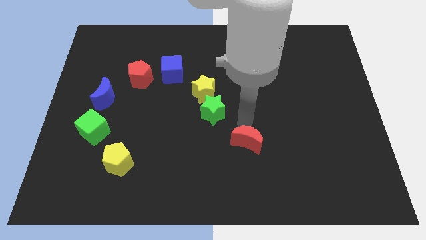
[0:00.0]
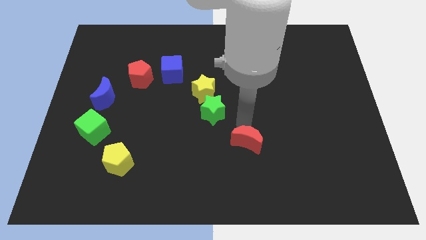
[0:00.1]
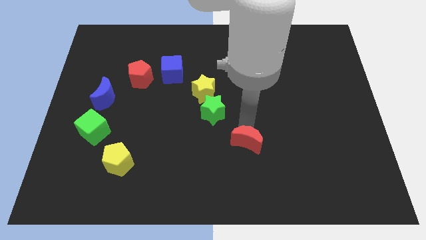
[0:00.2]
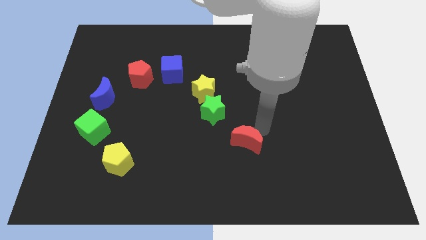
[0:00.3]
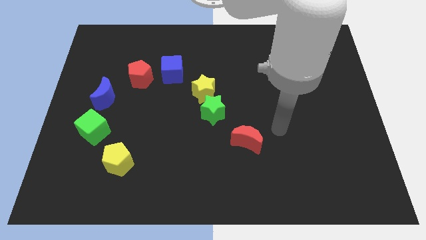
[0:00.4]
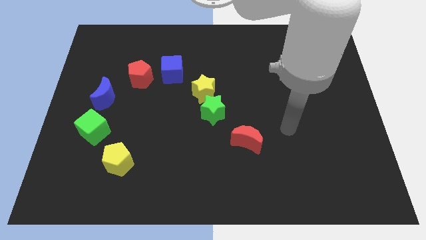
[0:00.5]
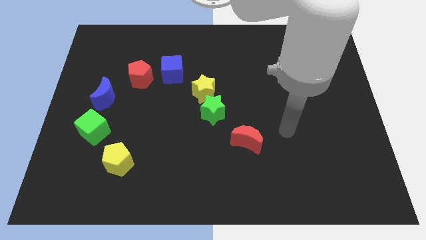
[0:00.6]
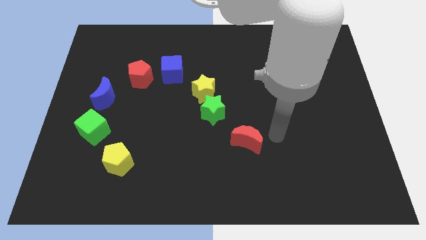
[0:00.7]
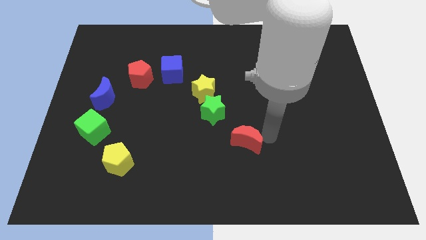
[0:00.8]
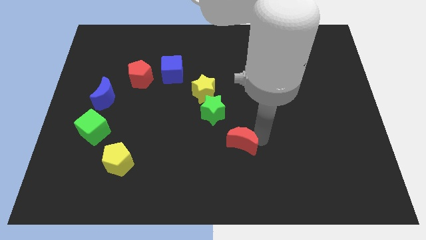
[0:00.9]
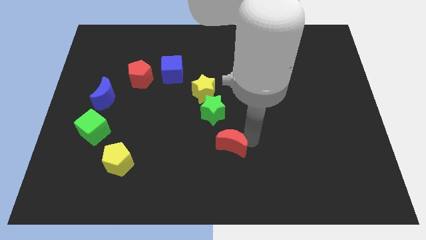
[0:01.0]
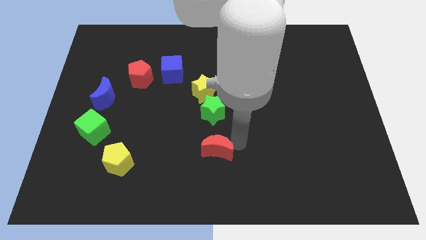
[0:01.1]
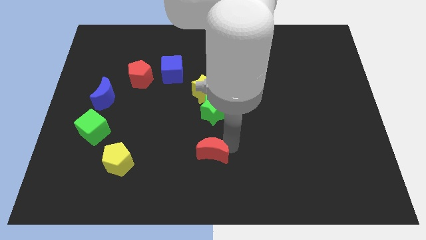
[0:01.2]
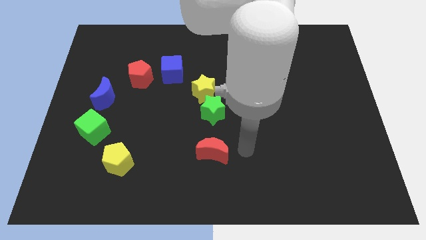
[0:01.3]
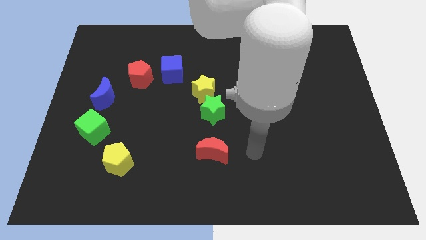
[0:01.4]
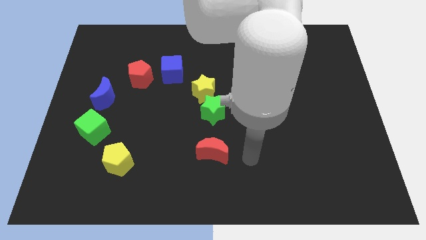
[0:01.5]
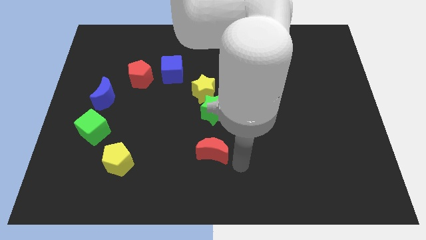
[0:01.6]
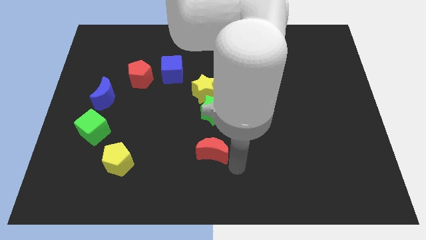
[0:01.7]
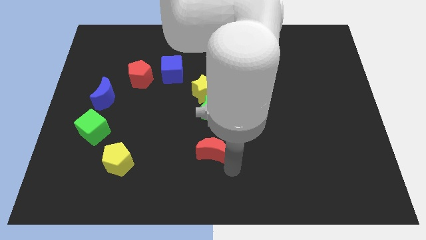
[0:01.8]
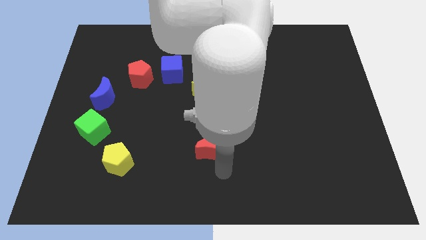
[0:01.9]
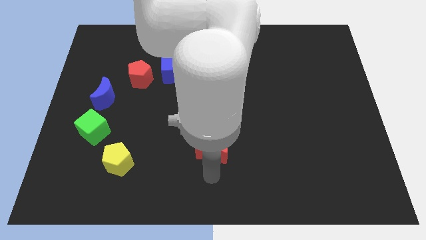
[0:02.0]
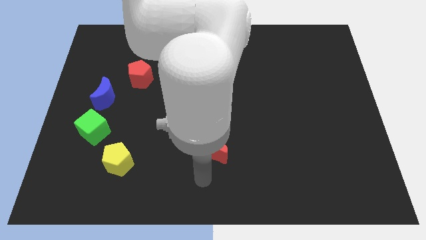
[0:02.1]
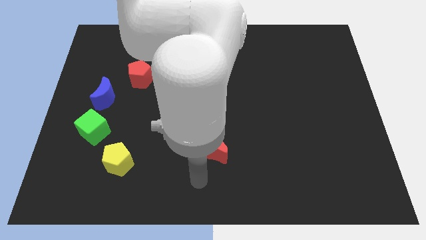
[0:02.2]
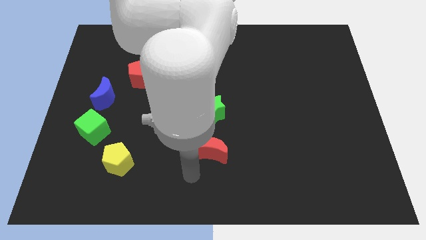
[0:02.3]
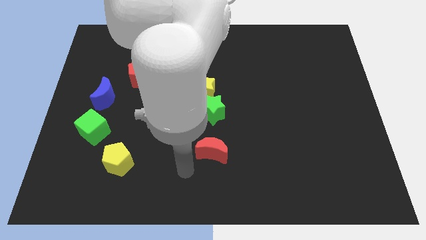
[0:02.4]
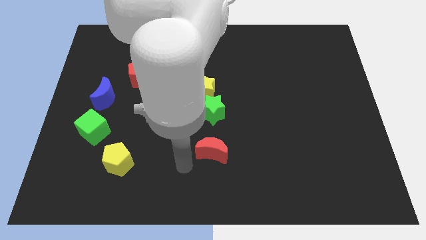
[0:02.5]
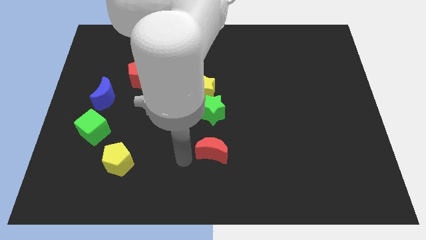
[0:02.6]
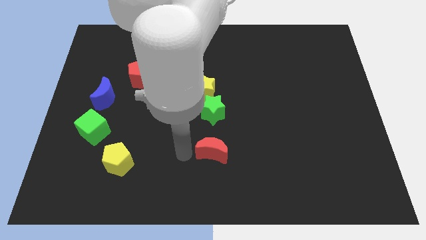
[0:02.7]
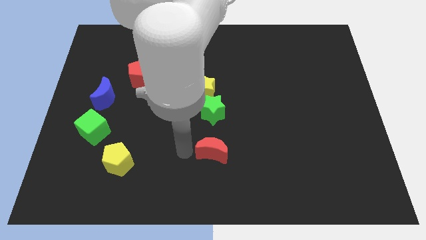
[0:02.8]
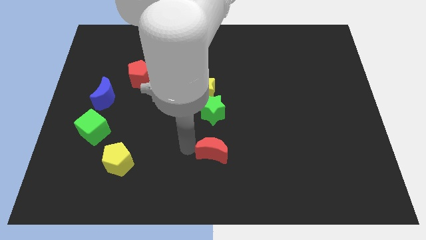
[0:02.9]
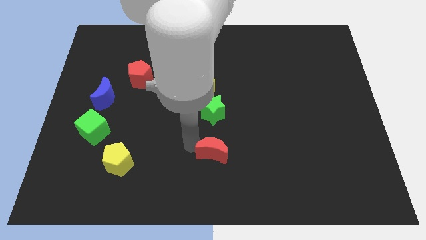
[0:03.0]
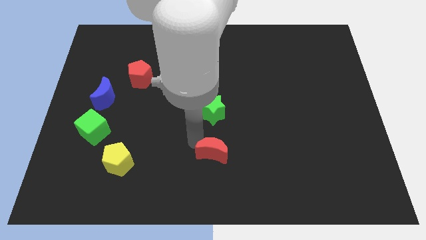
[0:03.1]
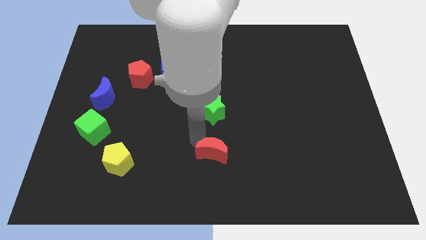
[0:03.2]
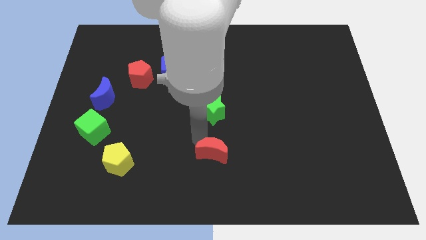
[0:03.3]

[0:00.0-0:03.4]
push the red crescent below the green star

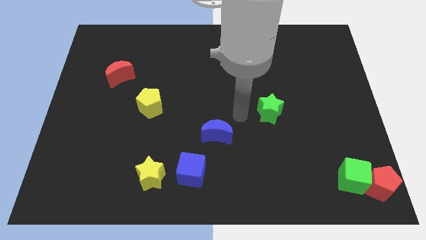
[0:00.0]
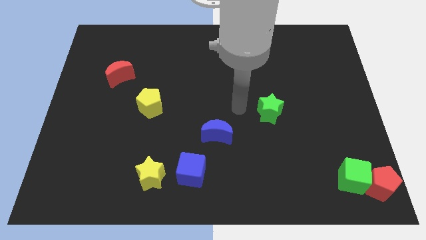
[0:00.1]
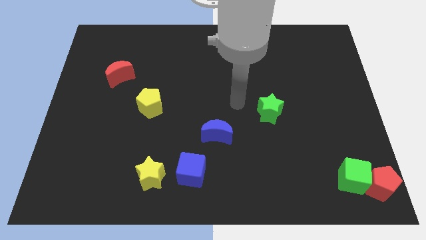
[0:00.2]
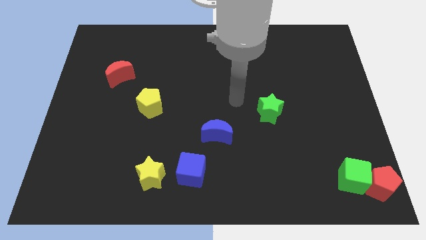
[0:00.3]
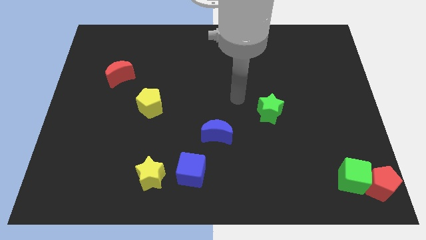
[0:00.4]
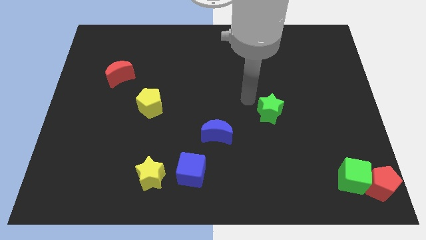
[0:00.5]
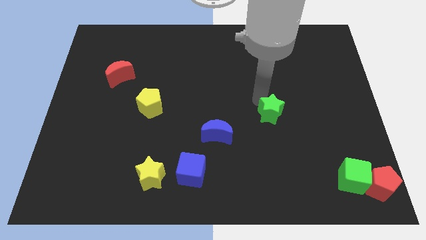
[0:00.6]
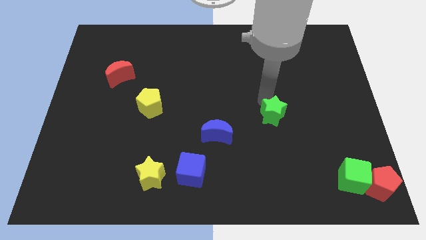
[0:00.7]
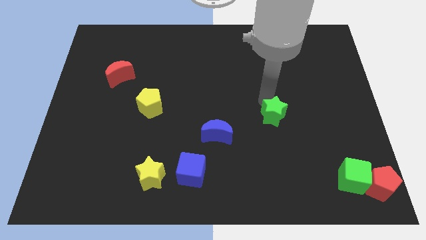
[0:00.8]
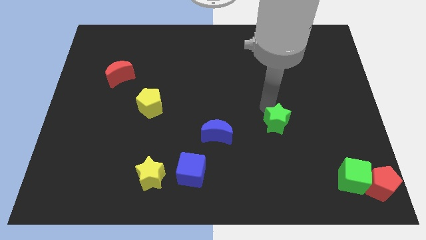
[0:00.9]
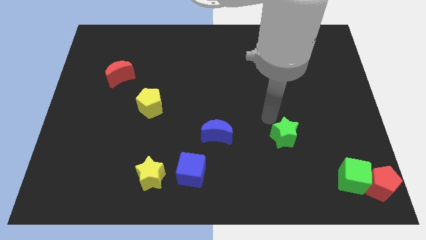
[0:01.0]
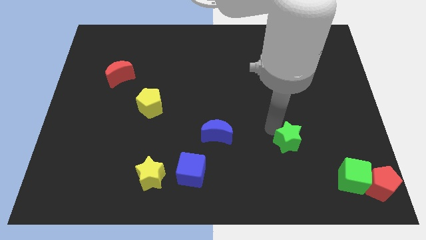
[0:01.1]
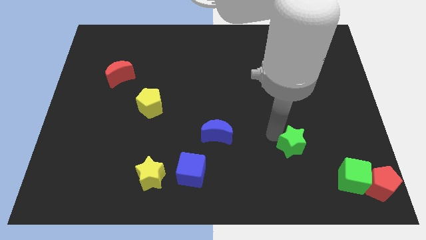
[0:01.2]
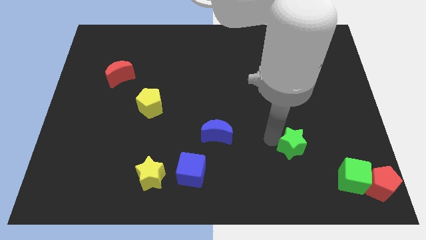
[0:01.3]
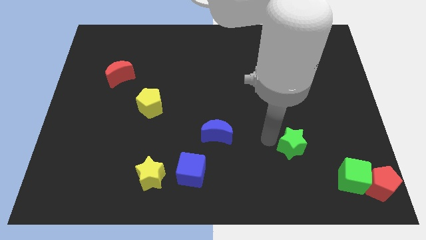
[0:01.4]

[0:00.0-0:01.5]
move the green star down slightly

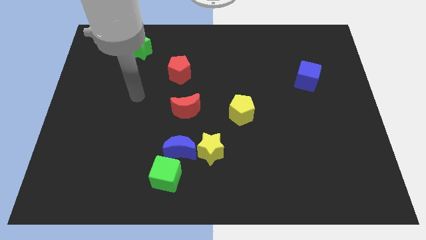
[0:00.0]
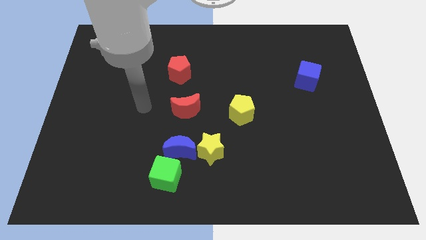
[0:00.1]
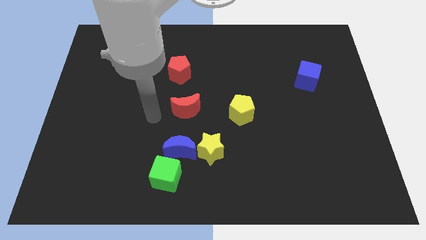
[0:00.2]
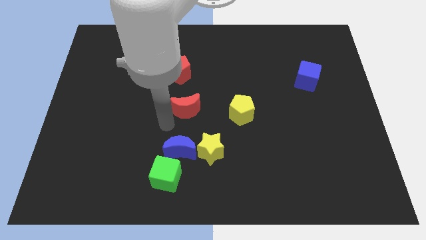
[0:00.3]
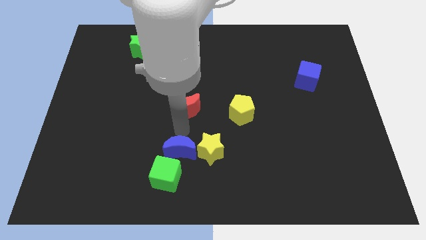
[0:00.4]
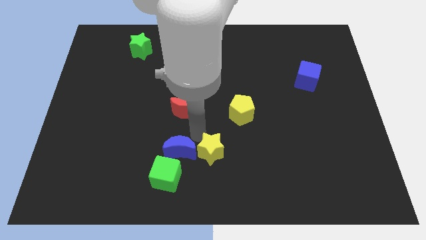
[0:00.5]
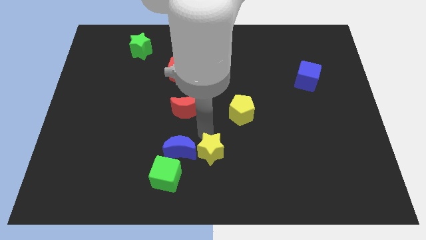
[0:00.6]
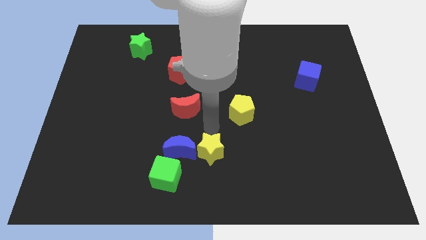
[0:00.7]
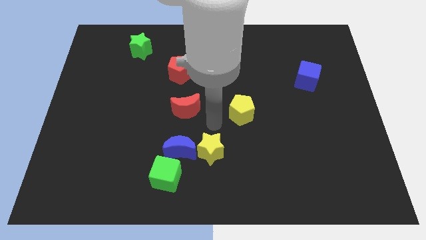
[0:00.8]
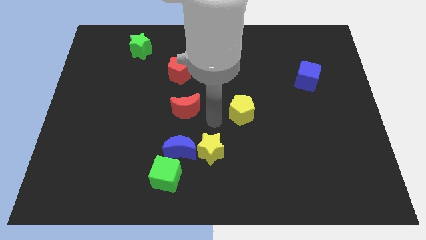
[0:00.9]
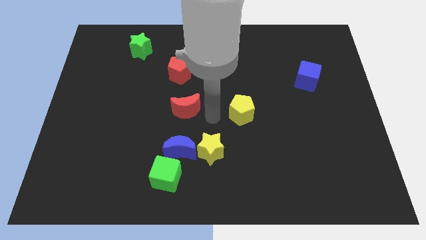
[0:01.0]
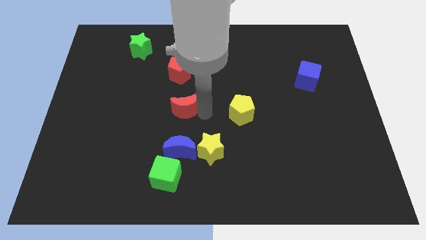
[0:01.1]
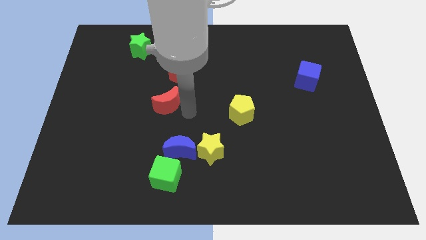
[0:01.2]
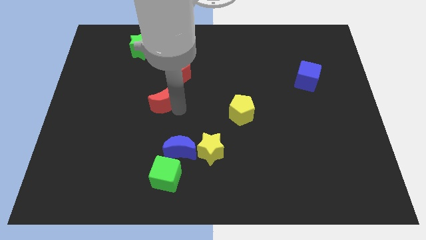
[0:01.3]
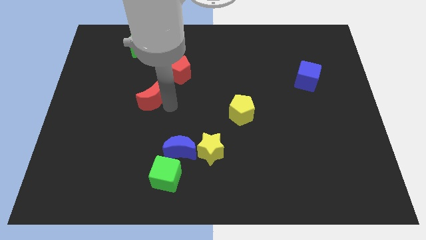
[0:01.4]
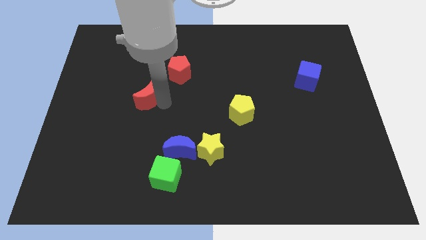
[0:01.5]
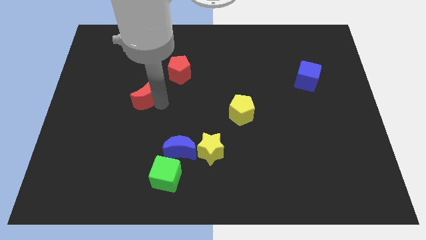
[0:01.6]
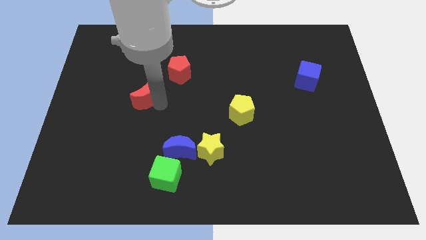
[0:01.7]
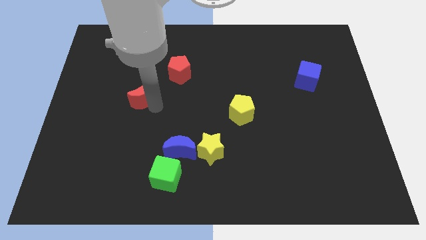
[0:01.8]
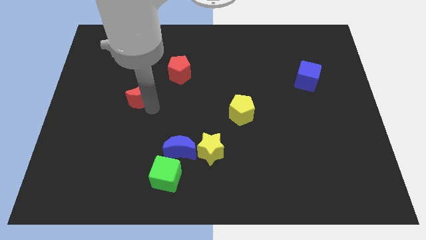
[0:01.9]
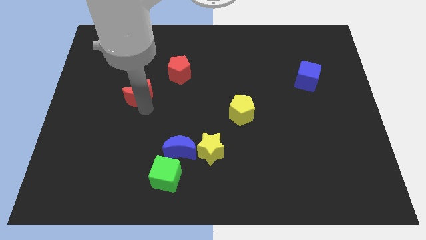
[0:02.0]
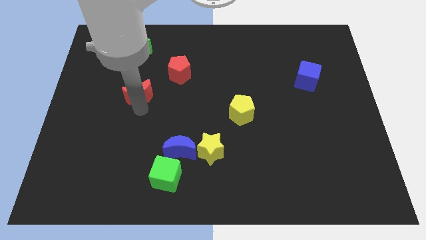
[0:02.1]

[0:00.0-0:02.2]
slightly move the red moon to the left side

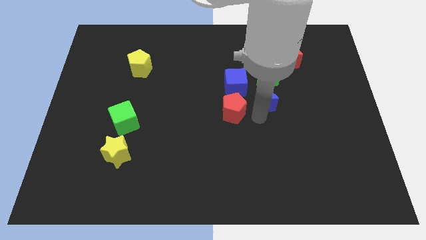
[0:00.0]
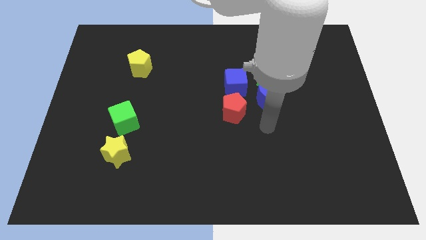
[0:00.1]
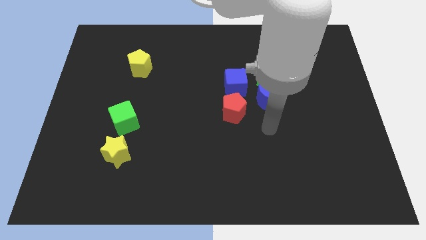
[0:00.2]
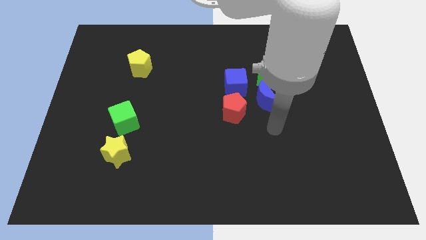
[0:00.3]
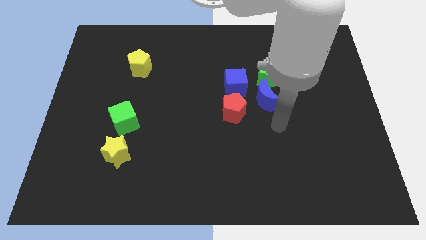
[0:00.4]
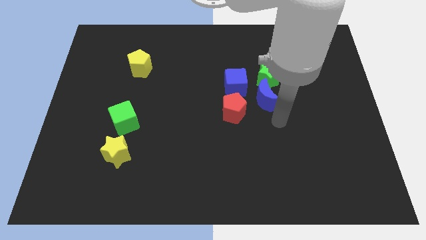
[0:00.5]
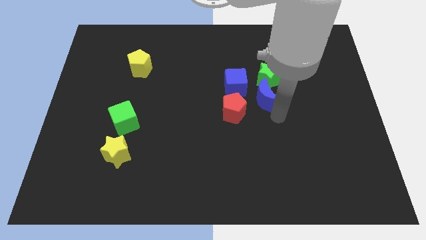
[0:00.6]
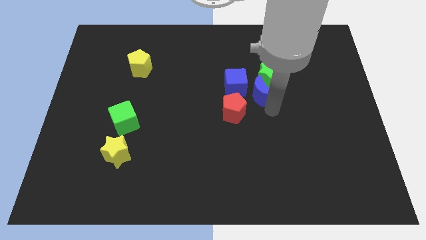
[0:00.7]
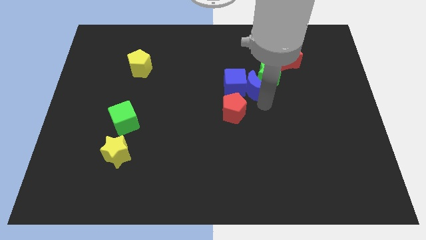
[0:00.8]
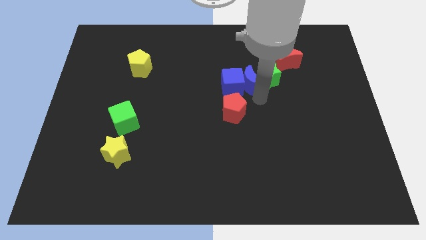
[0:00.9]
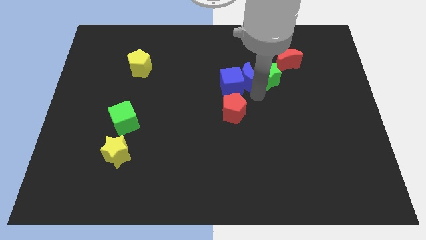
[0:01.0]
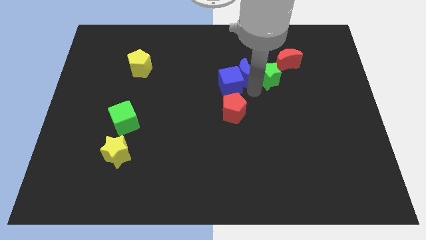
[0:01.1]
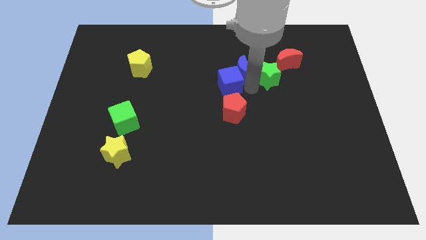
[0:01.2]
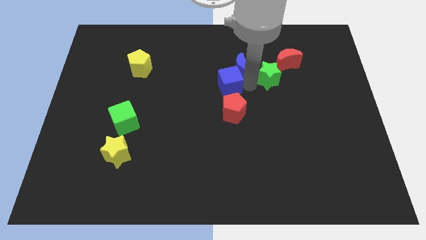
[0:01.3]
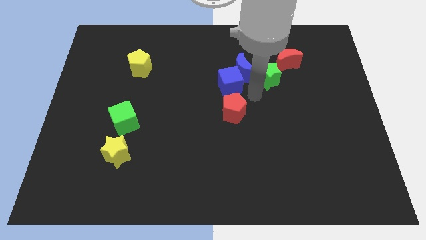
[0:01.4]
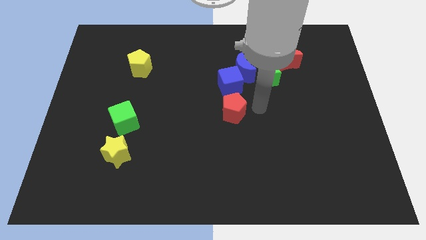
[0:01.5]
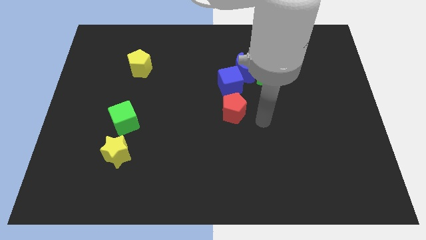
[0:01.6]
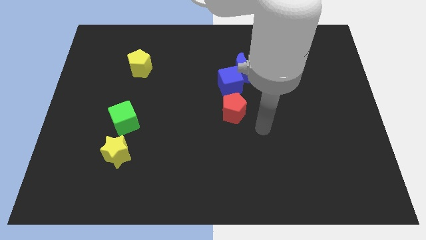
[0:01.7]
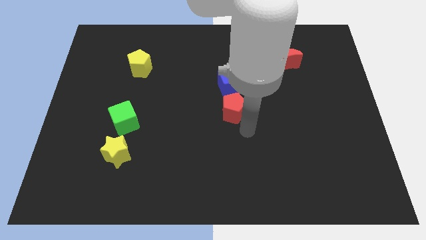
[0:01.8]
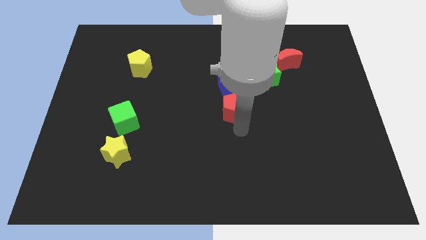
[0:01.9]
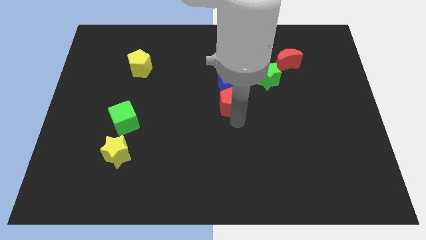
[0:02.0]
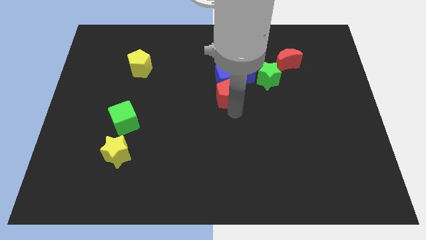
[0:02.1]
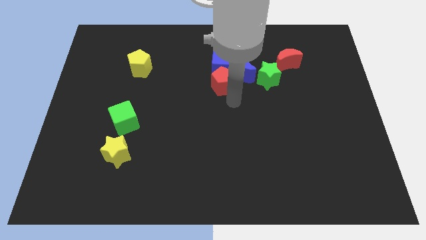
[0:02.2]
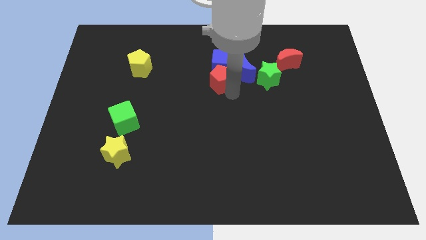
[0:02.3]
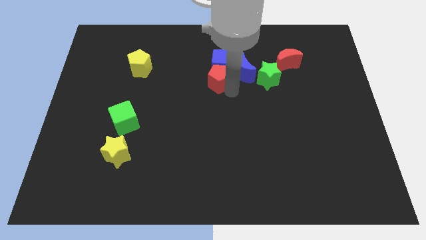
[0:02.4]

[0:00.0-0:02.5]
move the blue moon up
